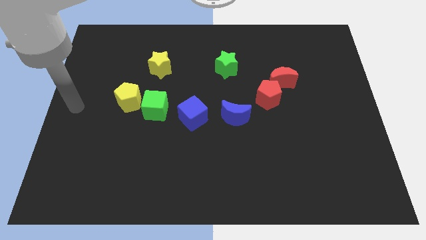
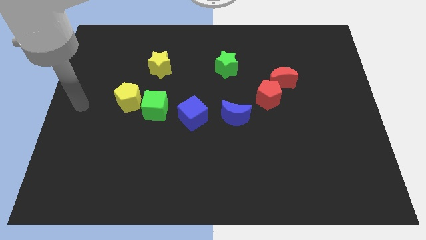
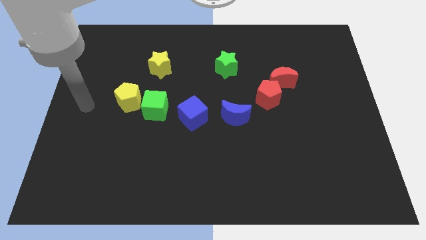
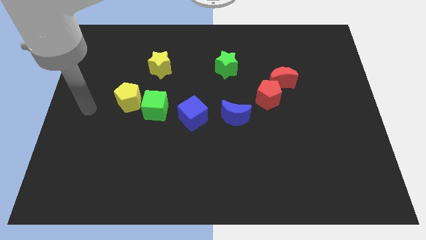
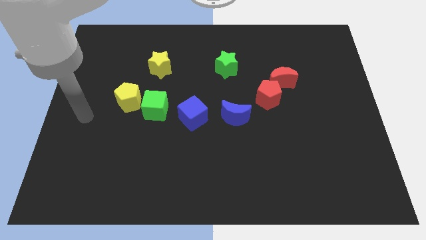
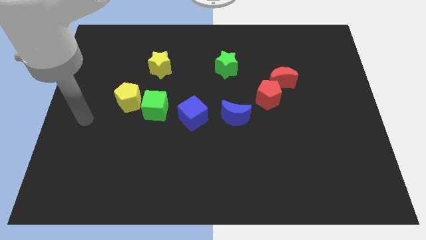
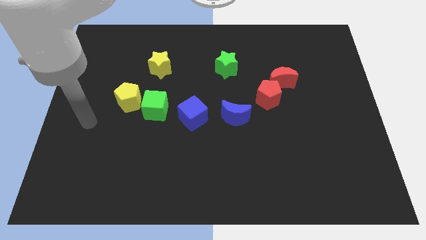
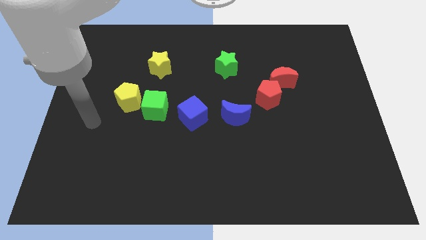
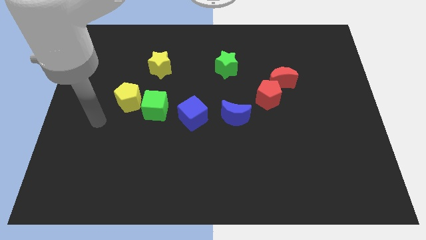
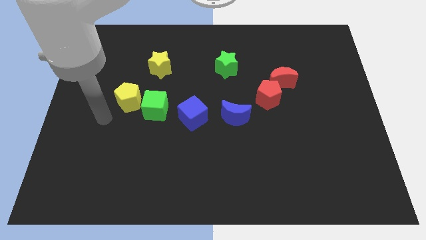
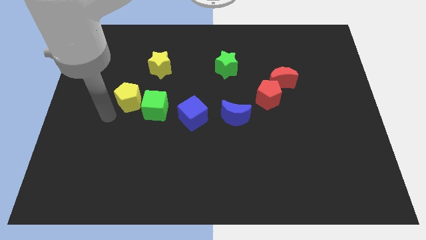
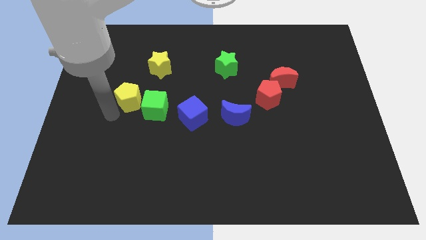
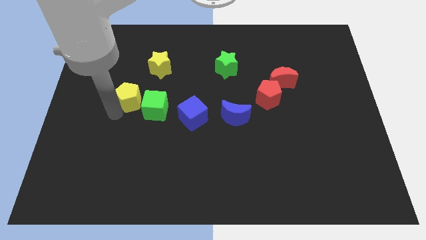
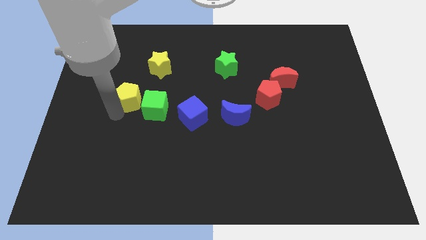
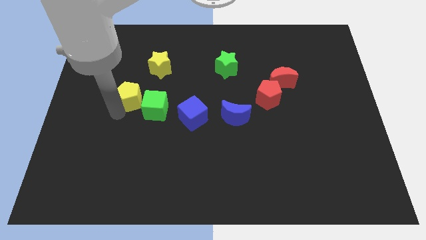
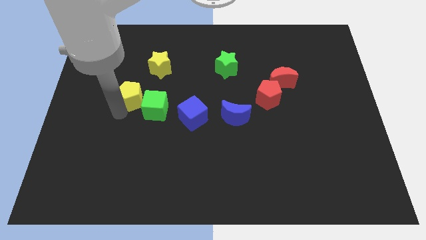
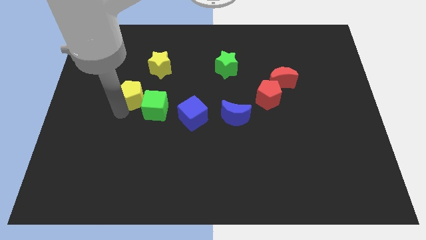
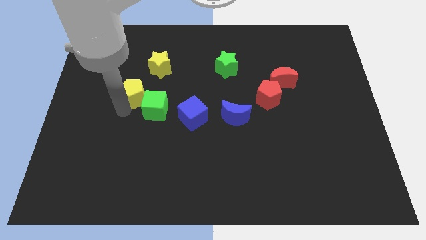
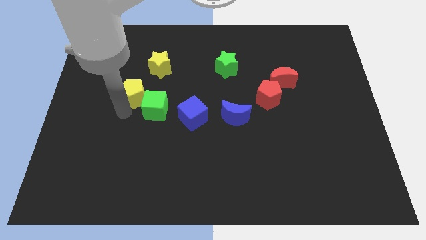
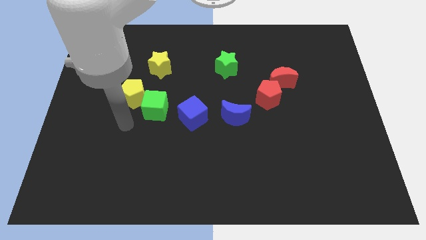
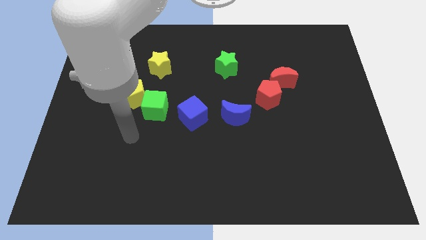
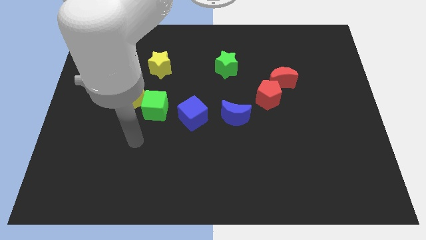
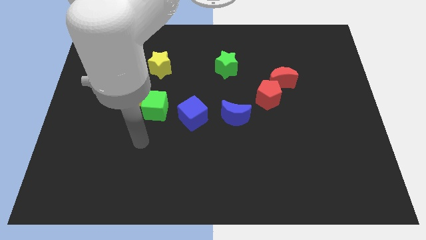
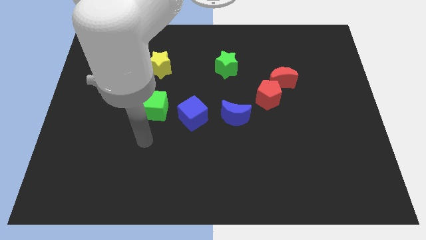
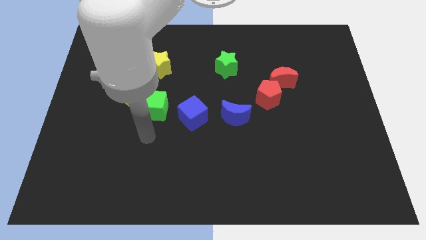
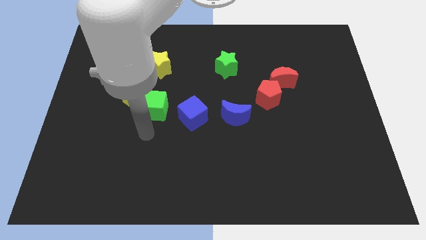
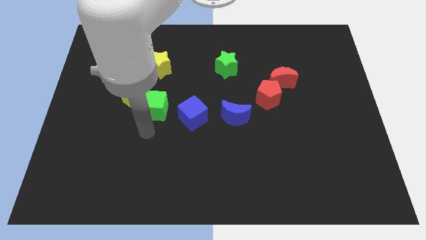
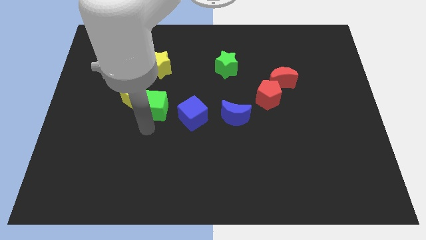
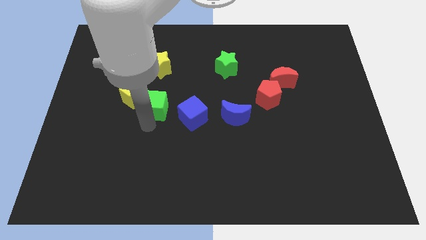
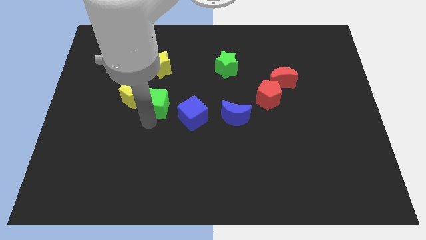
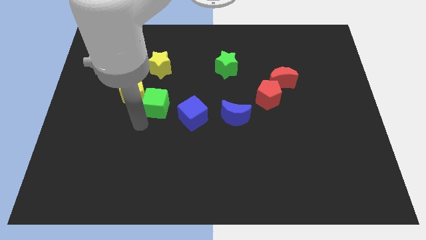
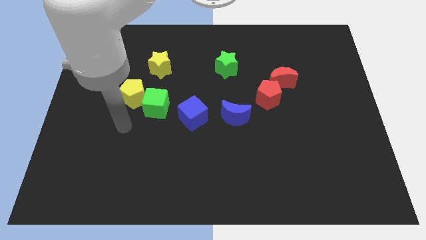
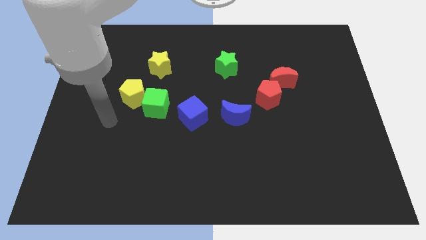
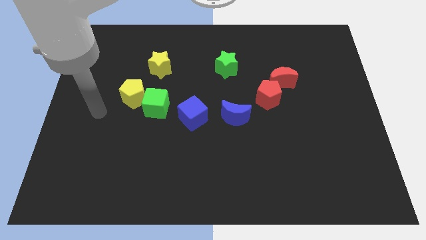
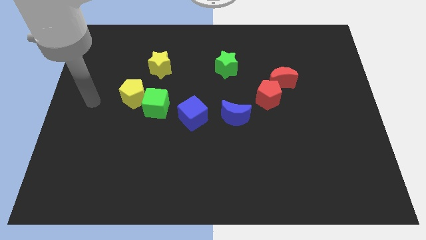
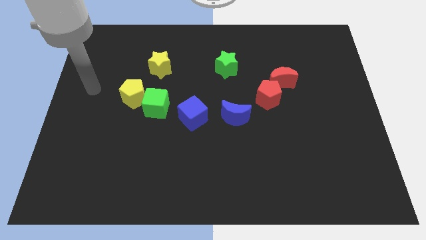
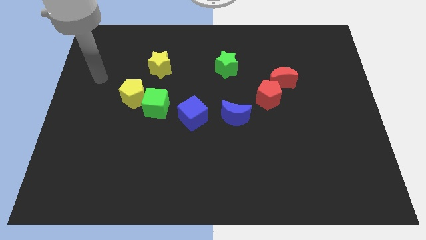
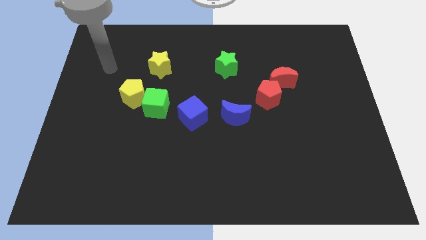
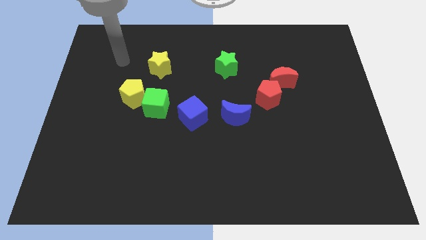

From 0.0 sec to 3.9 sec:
place the green cube to the right of yellow pentagon

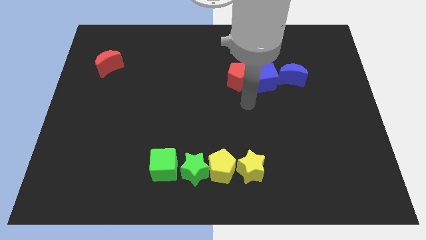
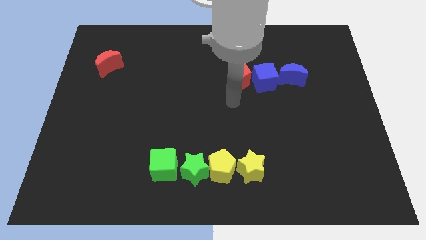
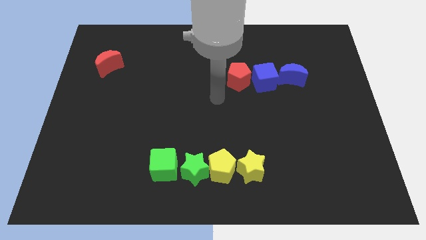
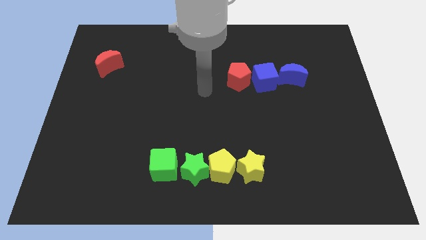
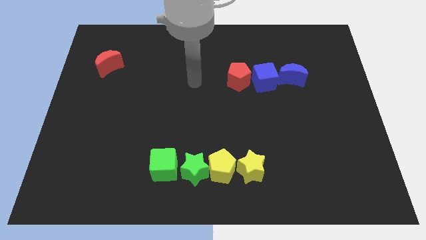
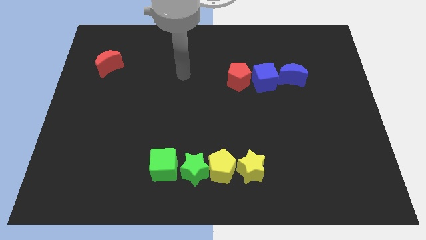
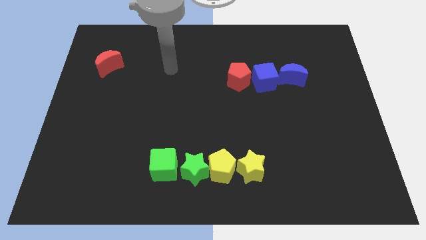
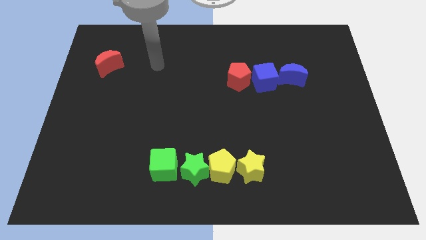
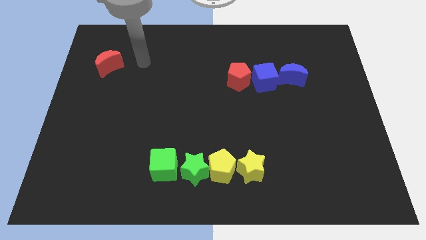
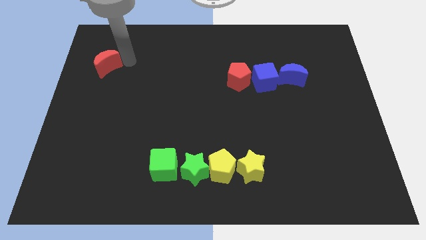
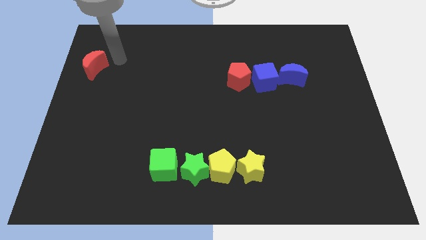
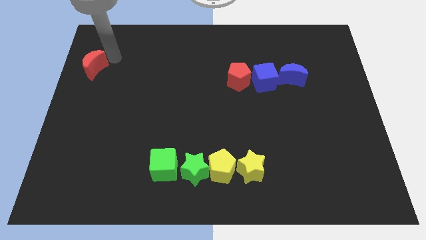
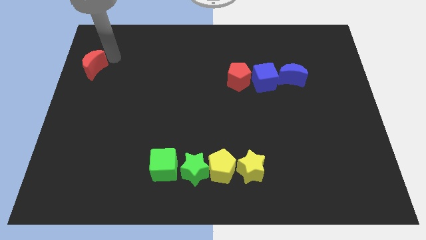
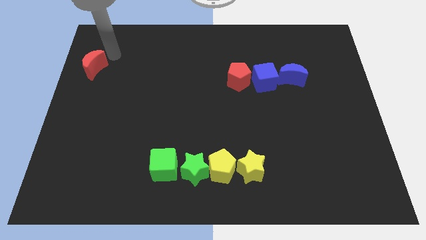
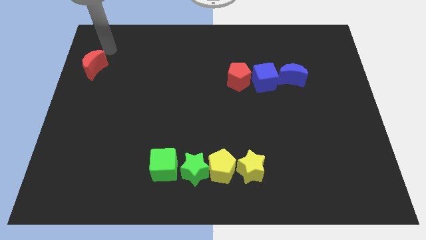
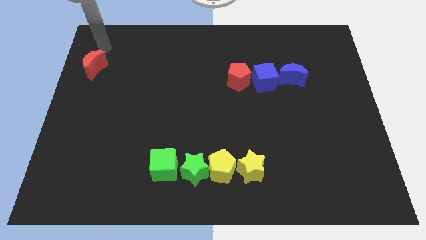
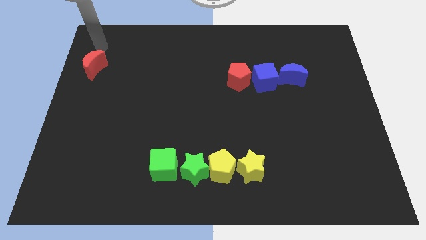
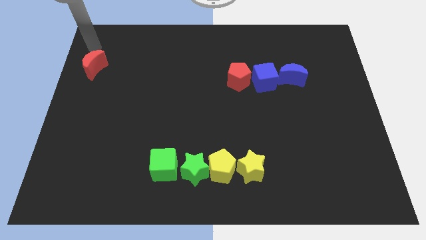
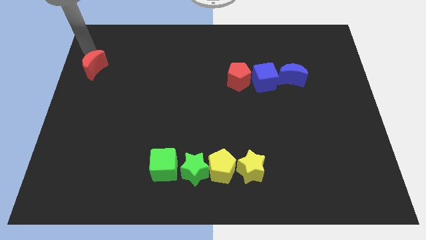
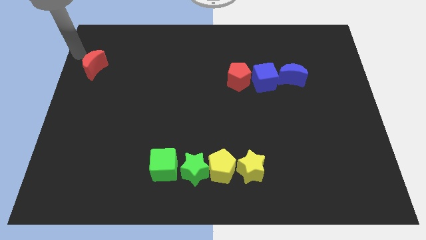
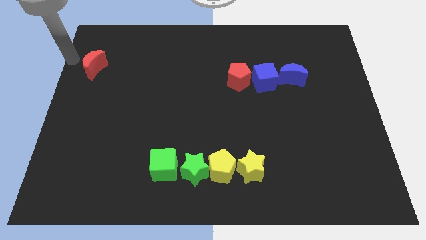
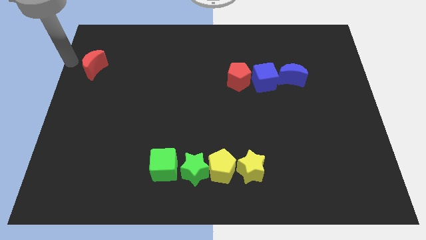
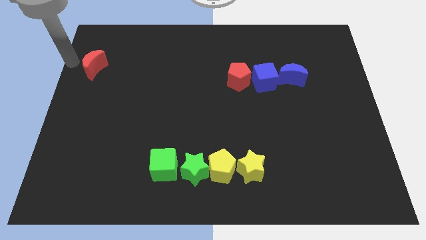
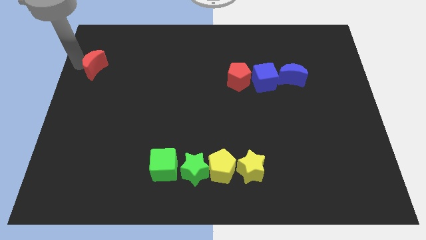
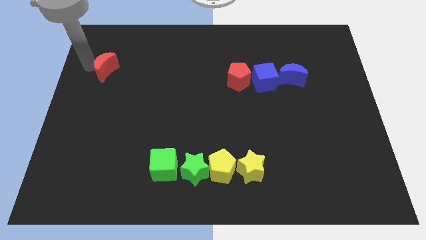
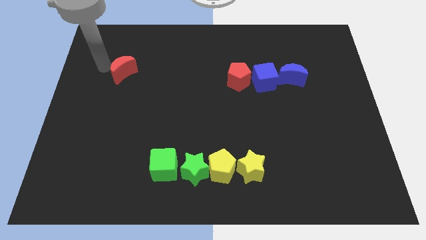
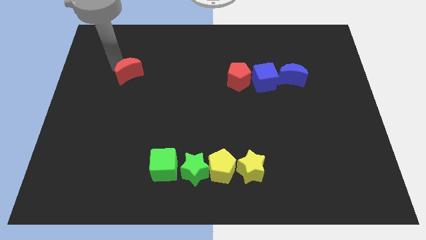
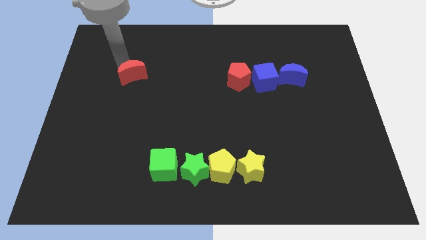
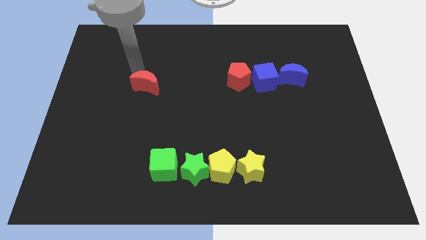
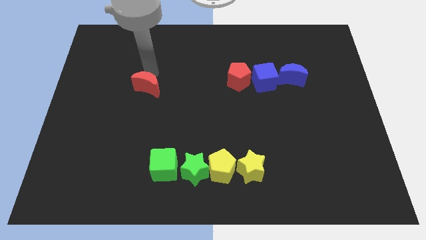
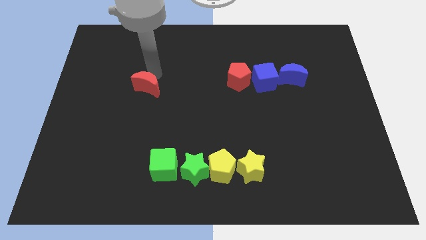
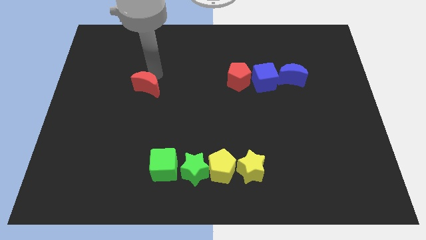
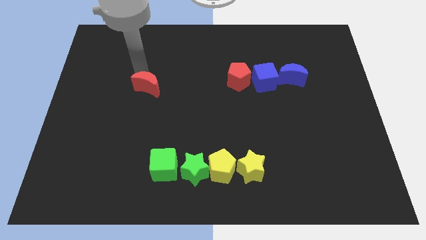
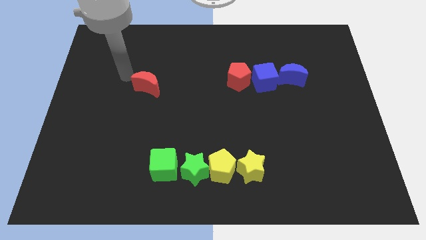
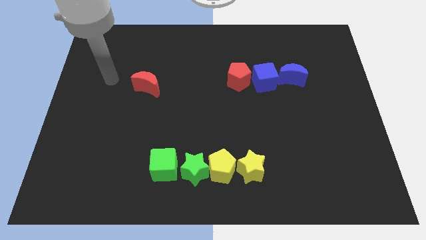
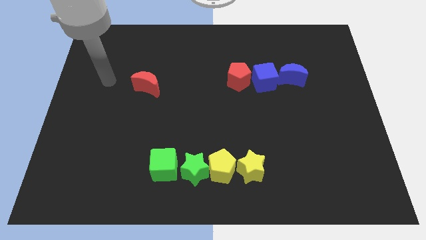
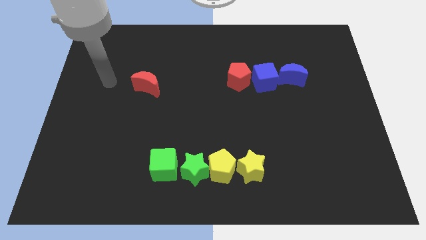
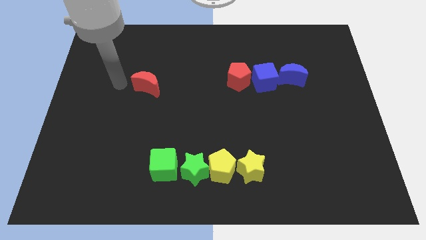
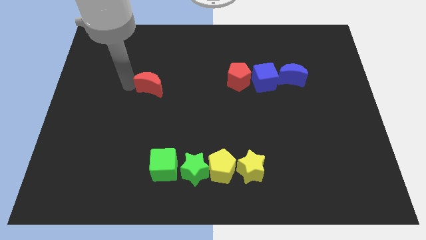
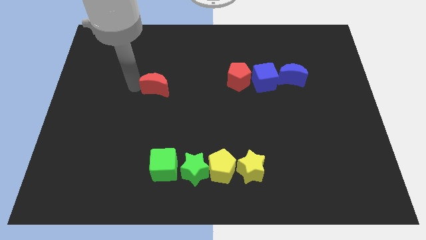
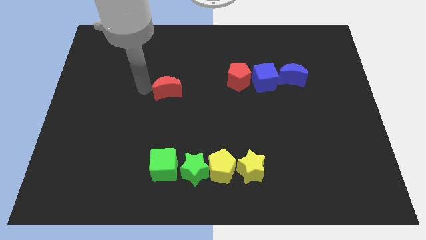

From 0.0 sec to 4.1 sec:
put the red moon vertically above the green cube

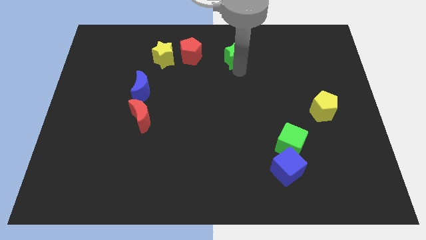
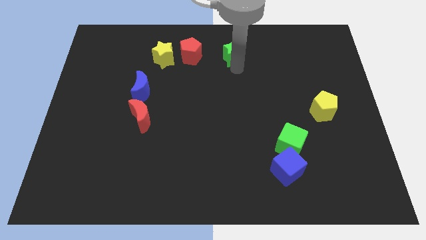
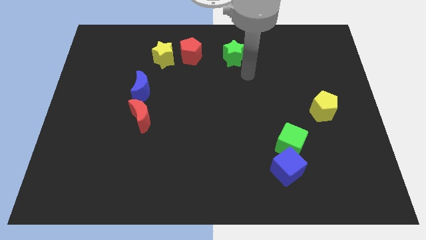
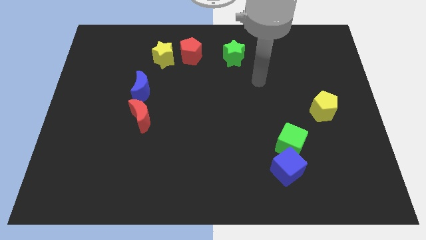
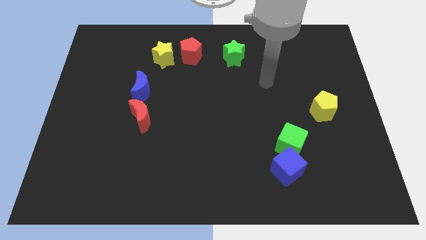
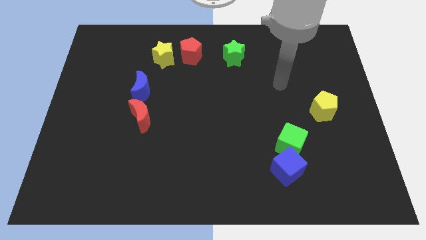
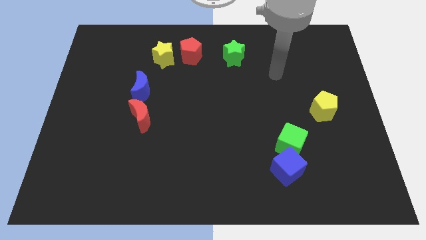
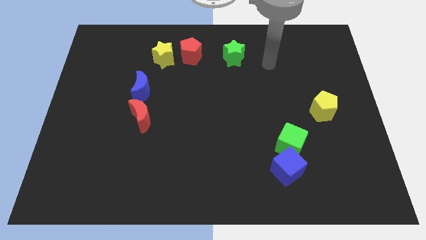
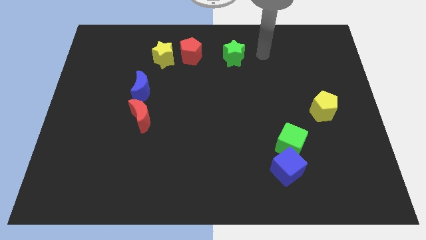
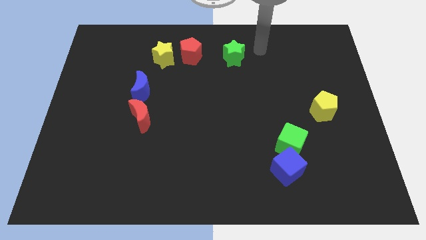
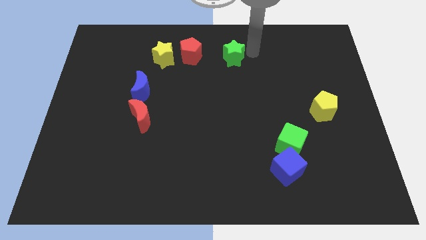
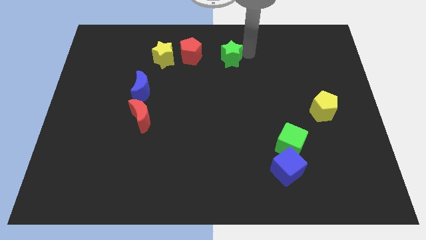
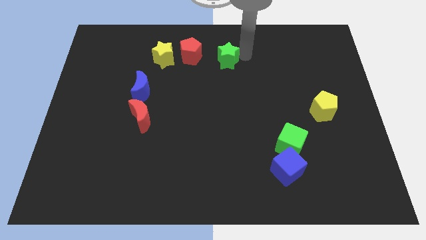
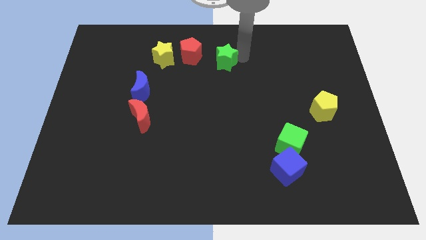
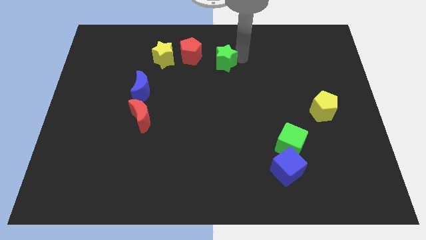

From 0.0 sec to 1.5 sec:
move green star towards the red pentagon
